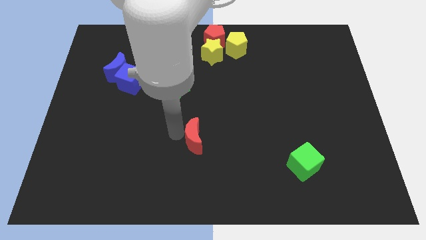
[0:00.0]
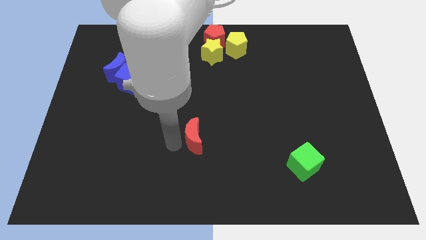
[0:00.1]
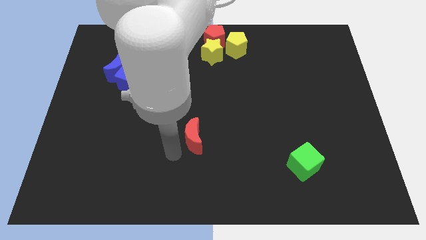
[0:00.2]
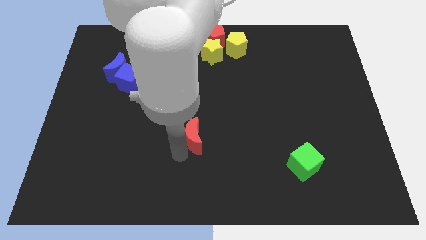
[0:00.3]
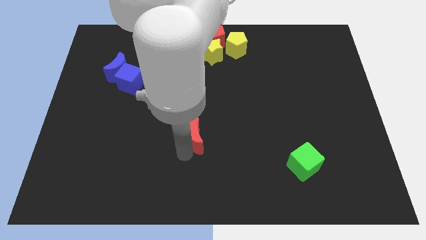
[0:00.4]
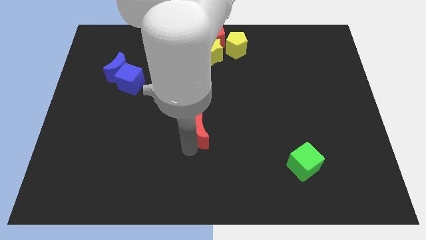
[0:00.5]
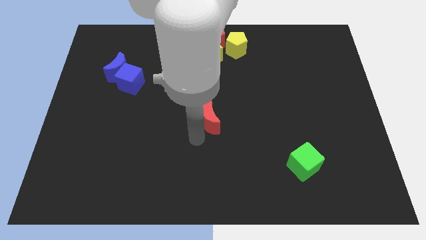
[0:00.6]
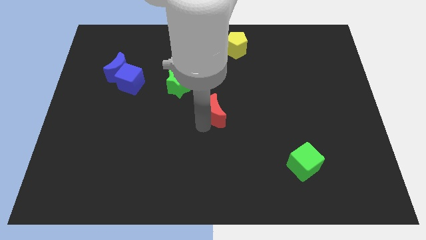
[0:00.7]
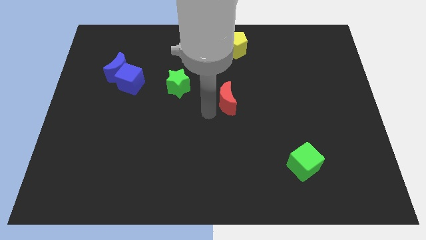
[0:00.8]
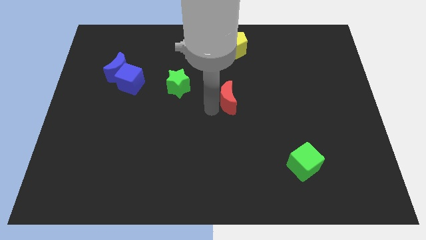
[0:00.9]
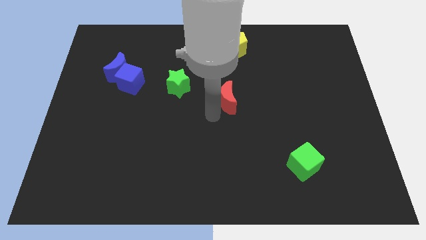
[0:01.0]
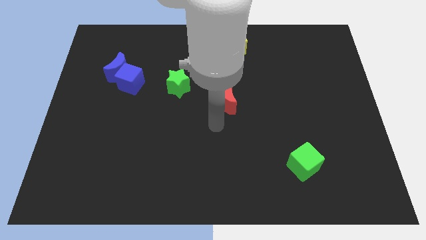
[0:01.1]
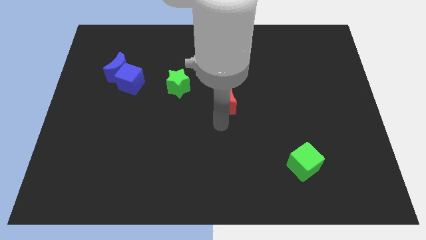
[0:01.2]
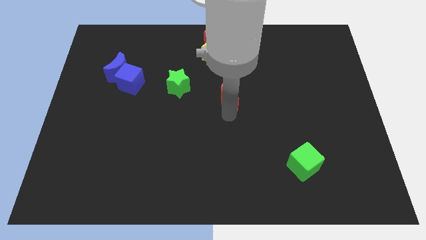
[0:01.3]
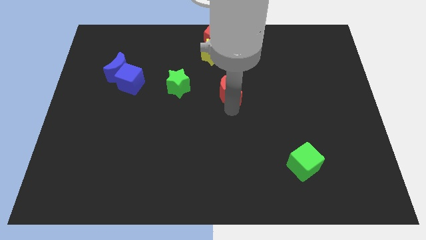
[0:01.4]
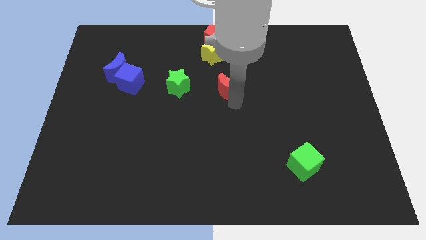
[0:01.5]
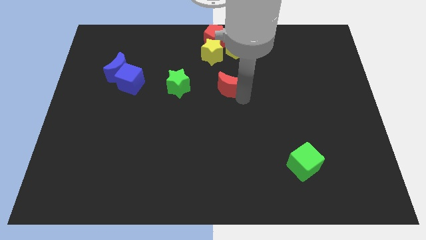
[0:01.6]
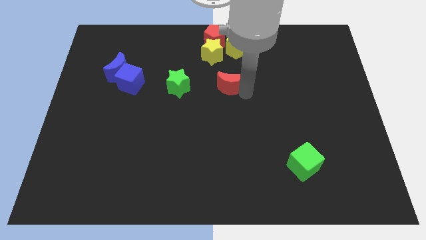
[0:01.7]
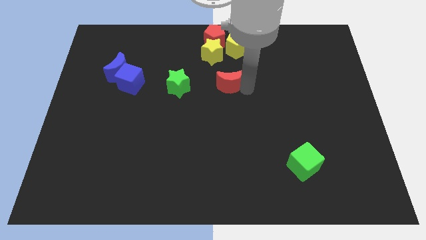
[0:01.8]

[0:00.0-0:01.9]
push the red moon diagonal to the right side of the green star

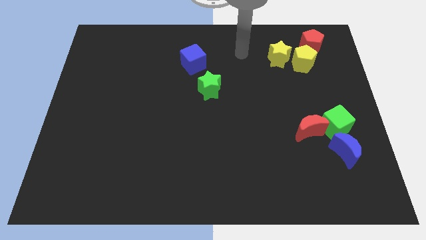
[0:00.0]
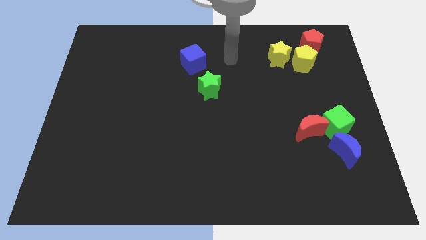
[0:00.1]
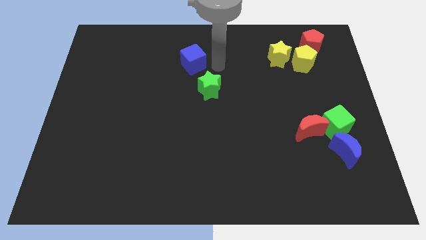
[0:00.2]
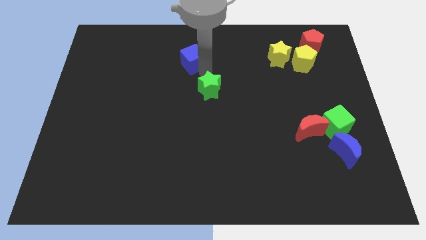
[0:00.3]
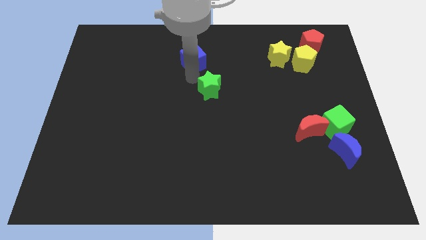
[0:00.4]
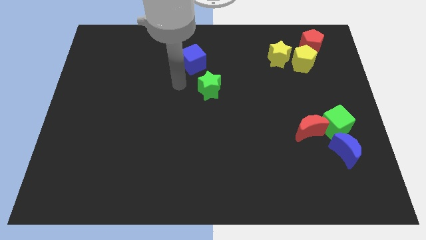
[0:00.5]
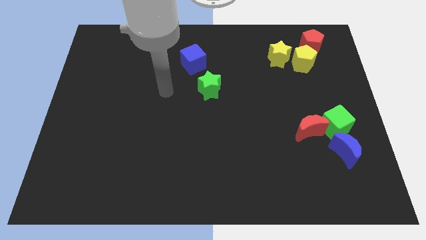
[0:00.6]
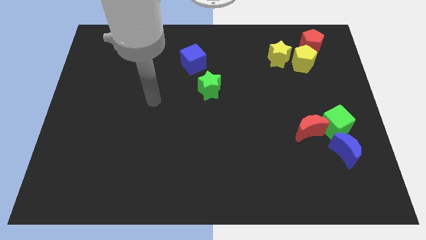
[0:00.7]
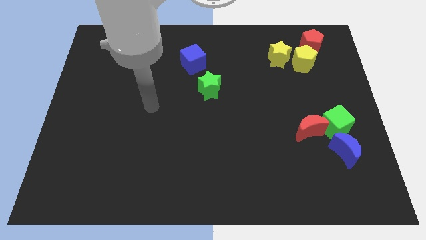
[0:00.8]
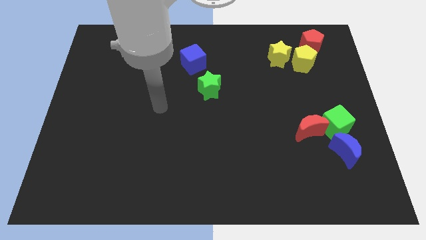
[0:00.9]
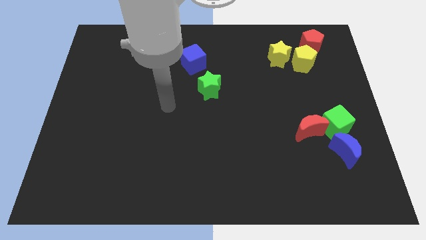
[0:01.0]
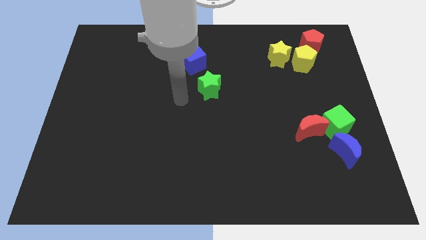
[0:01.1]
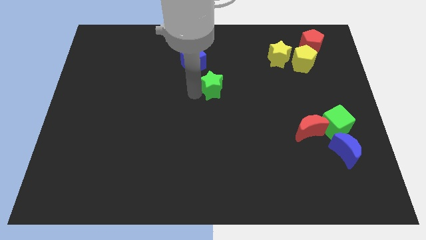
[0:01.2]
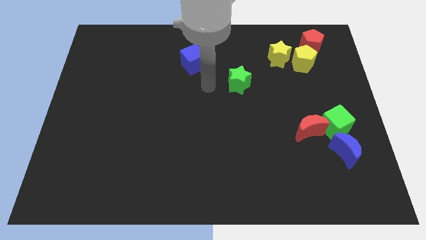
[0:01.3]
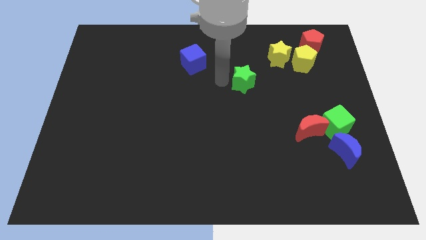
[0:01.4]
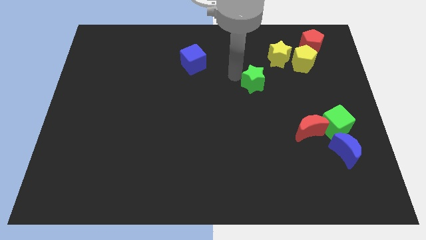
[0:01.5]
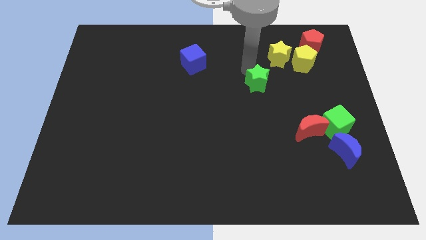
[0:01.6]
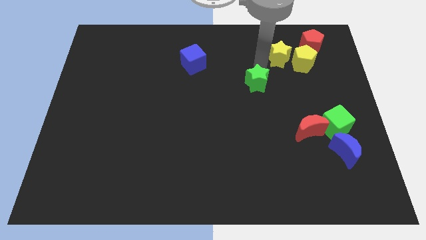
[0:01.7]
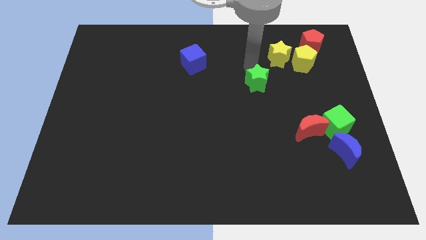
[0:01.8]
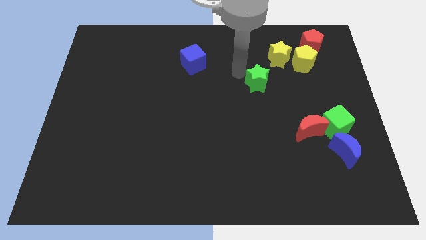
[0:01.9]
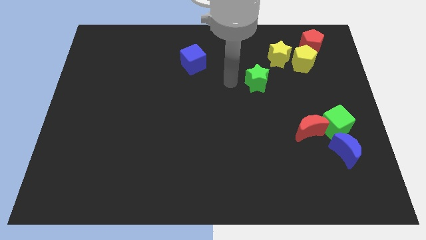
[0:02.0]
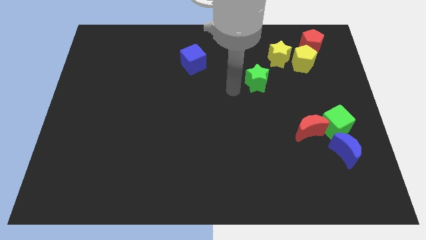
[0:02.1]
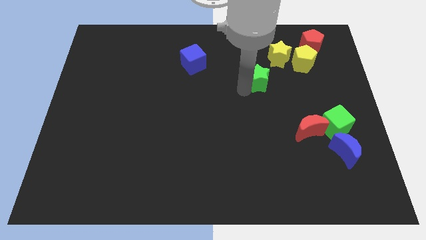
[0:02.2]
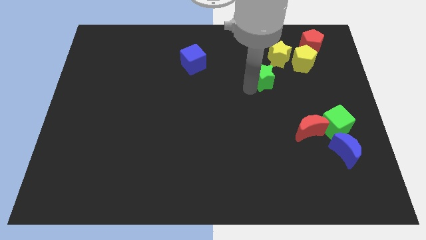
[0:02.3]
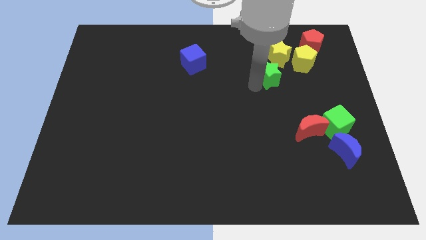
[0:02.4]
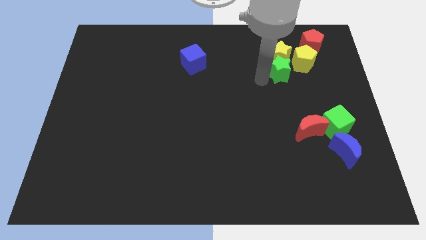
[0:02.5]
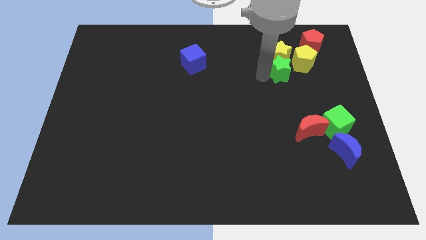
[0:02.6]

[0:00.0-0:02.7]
push the green star into the group of blocks

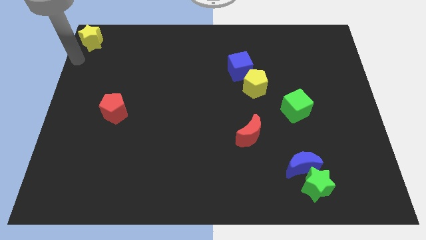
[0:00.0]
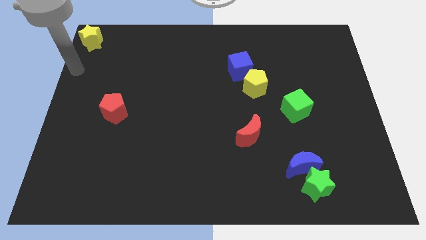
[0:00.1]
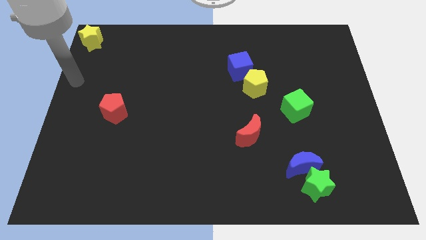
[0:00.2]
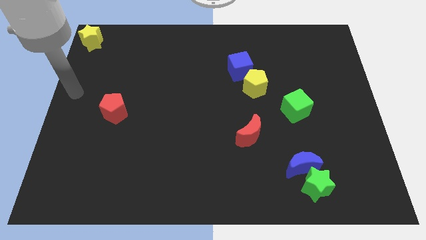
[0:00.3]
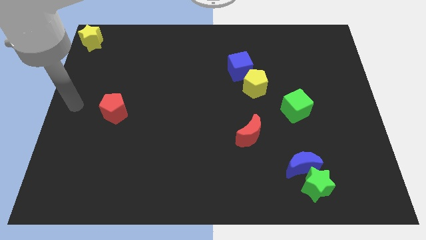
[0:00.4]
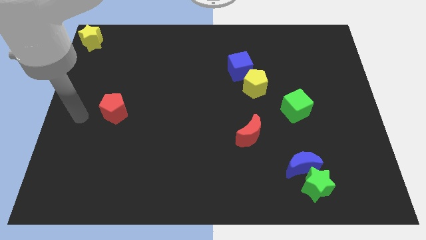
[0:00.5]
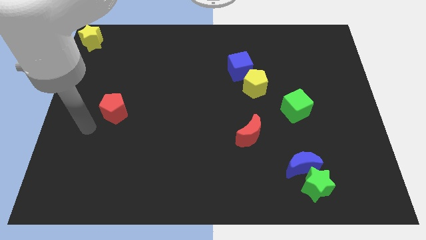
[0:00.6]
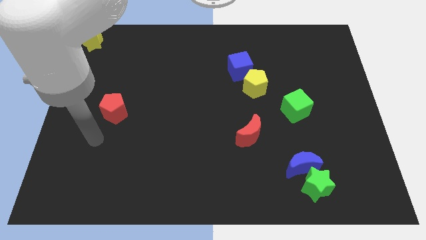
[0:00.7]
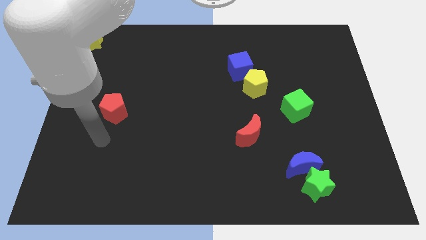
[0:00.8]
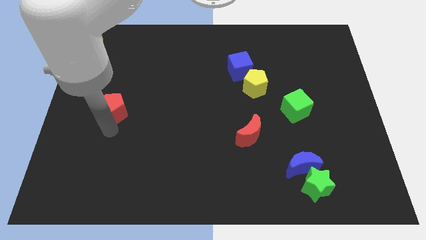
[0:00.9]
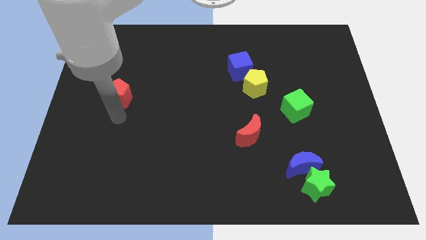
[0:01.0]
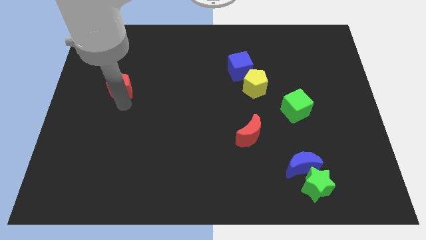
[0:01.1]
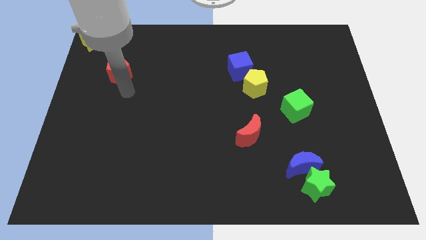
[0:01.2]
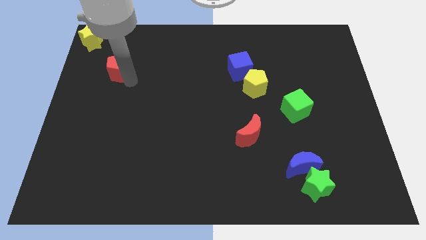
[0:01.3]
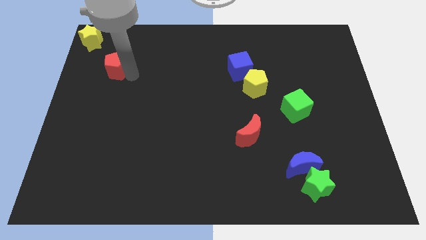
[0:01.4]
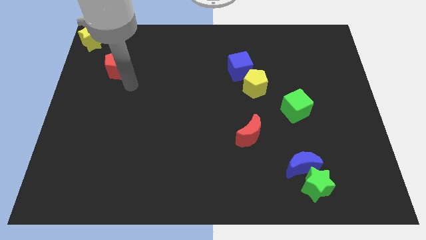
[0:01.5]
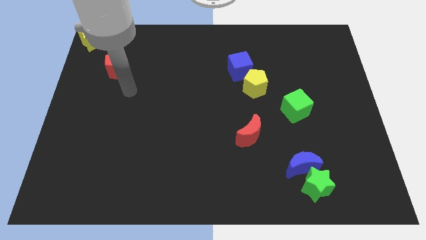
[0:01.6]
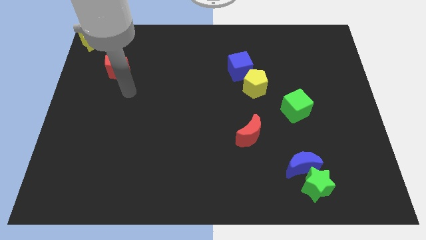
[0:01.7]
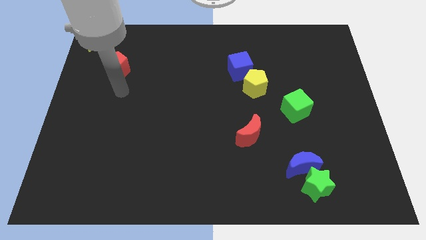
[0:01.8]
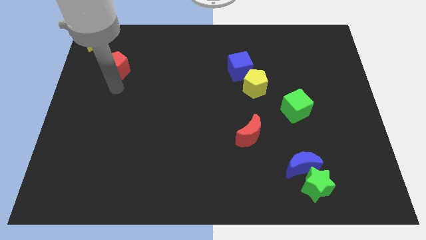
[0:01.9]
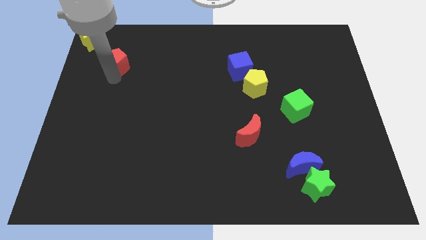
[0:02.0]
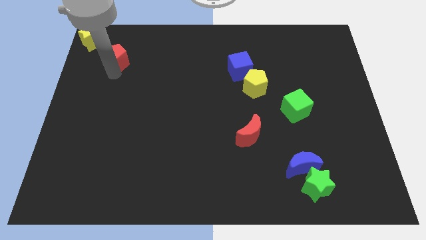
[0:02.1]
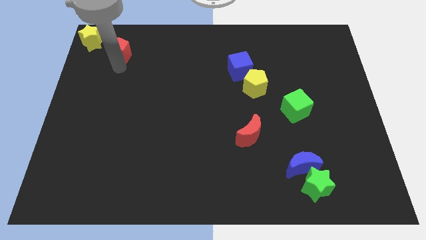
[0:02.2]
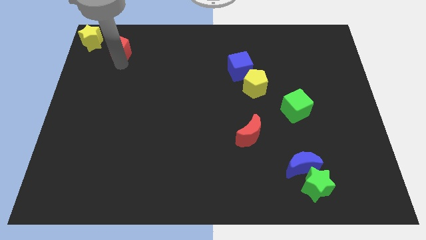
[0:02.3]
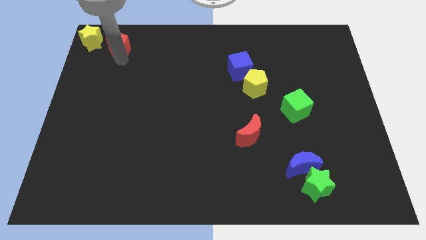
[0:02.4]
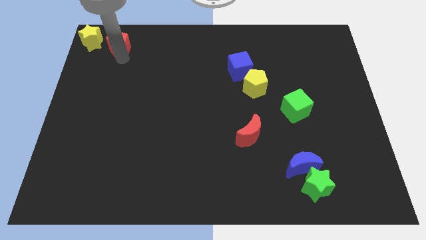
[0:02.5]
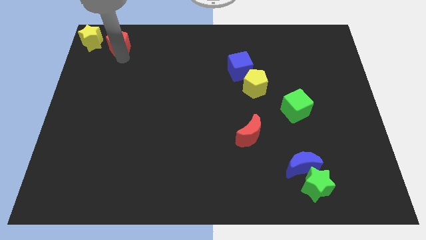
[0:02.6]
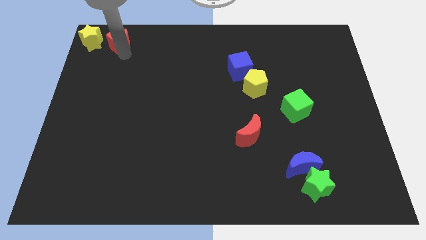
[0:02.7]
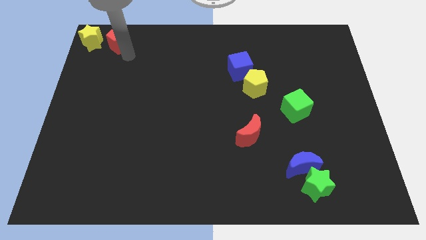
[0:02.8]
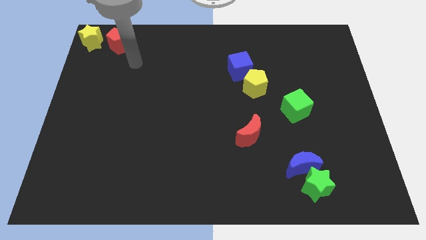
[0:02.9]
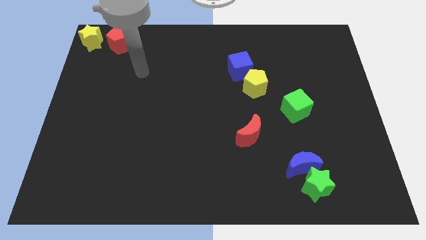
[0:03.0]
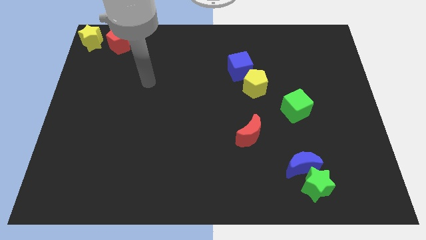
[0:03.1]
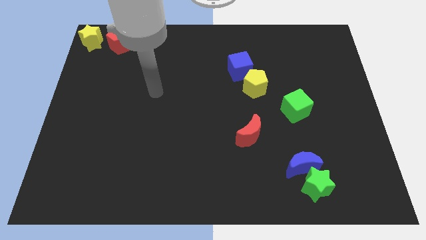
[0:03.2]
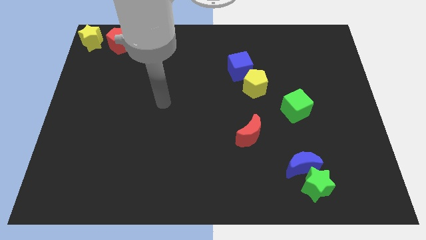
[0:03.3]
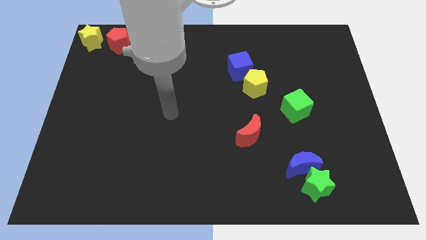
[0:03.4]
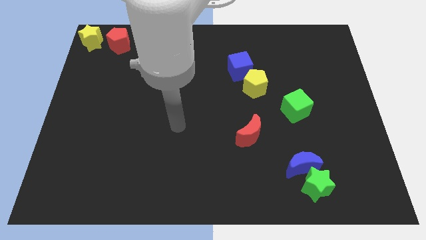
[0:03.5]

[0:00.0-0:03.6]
move the red pentagon to the right of yellow star

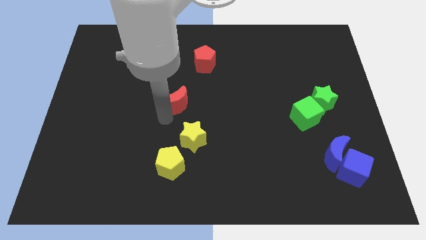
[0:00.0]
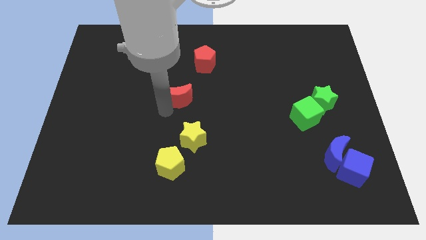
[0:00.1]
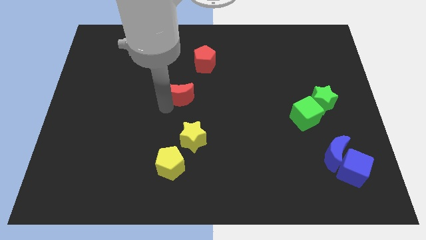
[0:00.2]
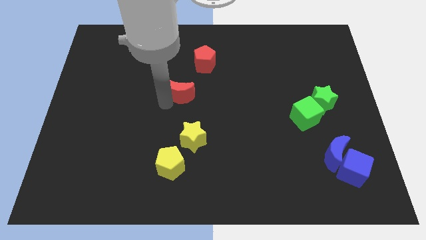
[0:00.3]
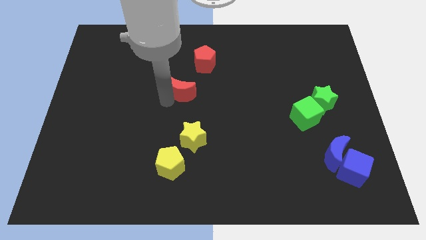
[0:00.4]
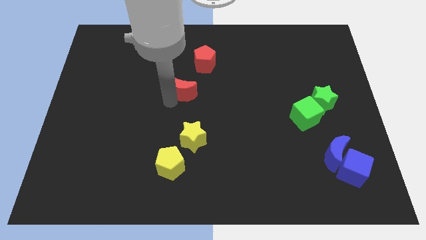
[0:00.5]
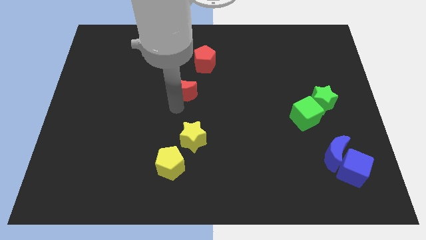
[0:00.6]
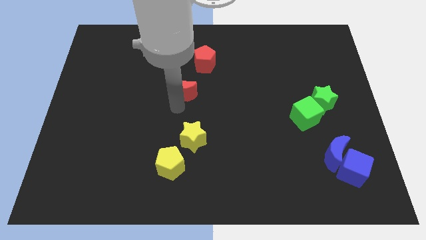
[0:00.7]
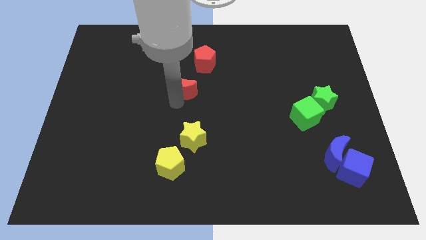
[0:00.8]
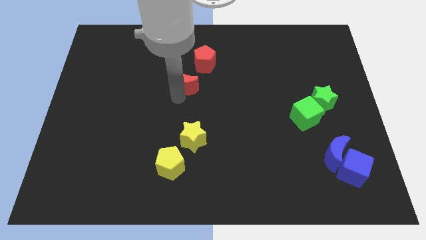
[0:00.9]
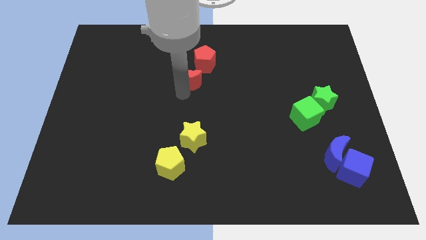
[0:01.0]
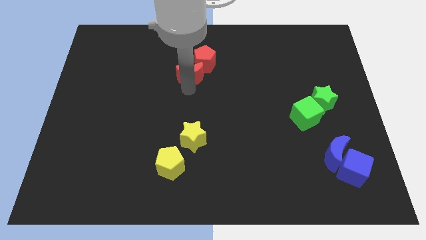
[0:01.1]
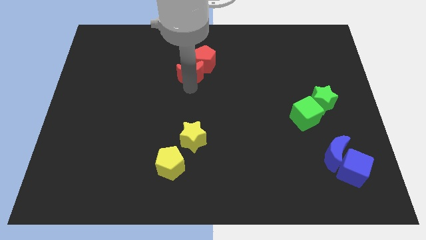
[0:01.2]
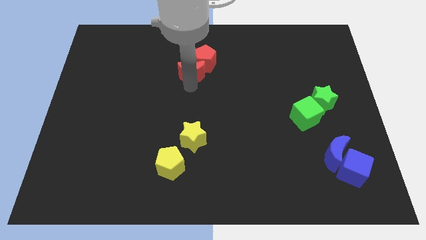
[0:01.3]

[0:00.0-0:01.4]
slide the red moon into the bottom side of the red pentagon
